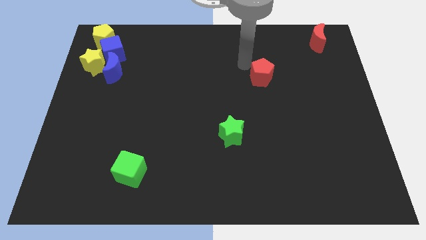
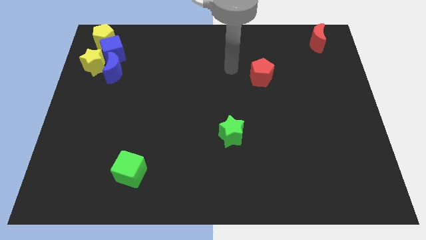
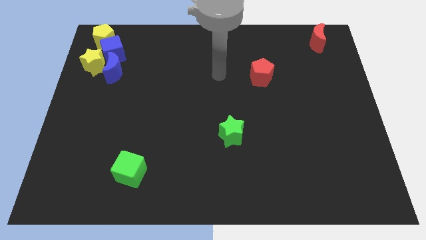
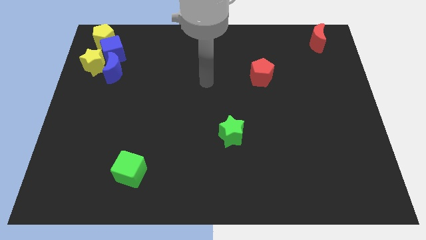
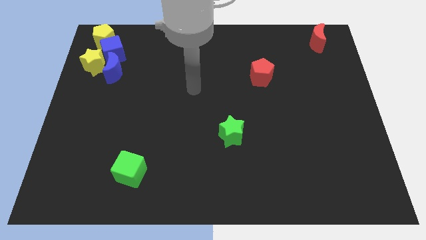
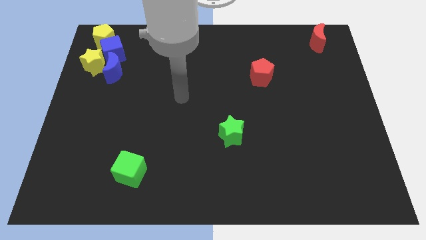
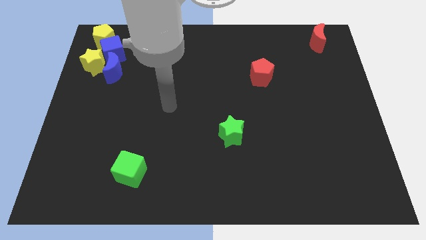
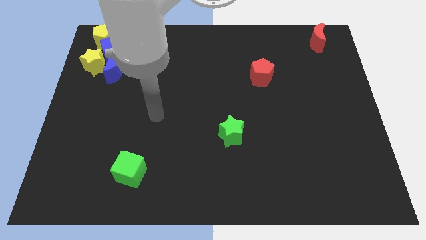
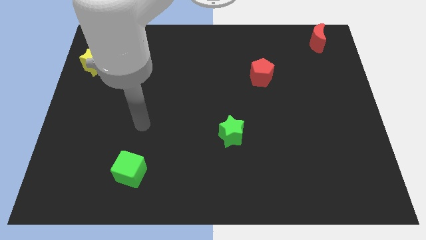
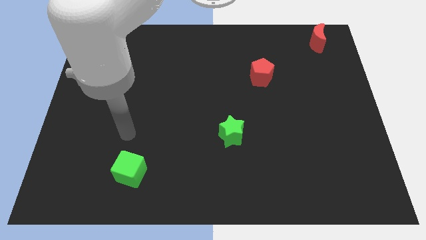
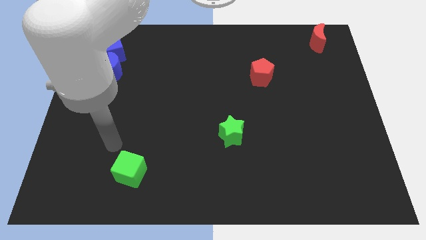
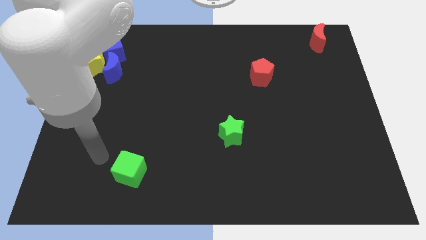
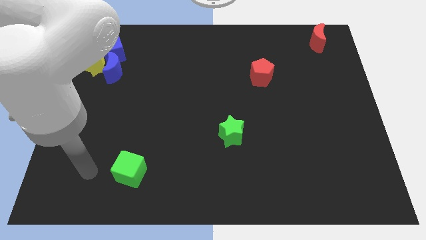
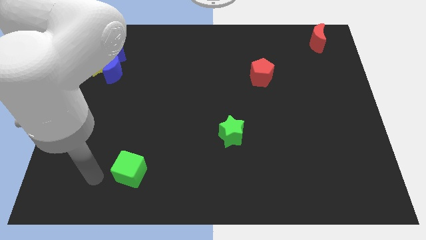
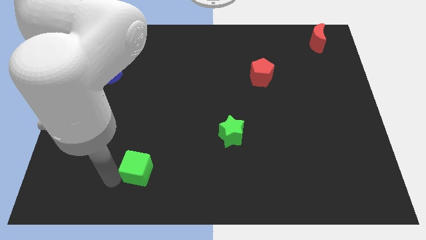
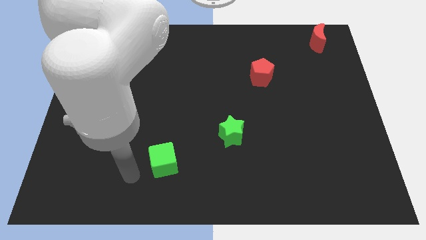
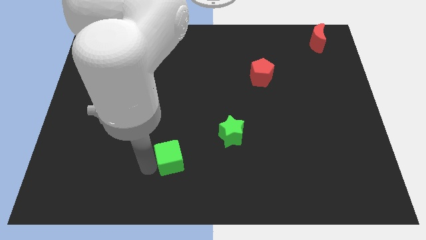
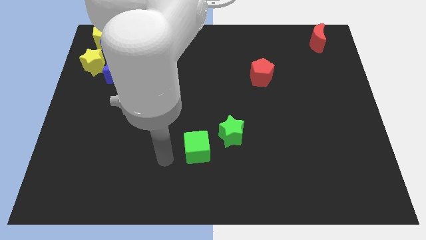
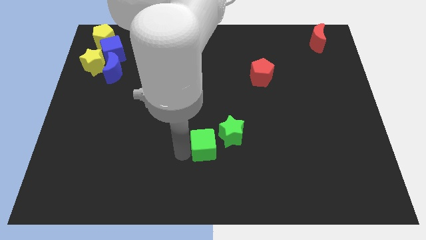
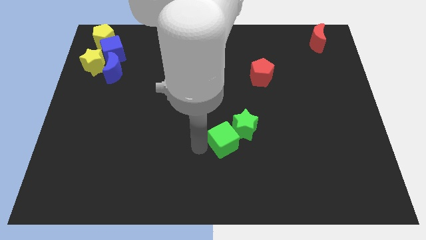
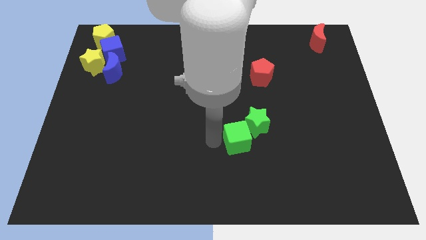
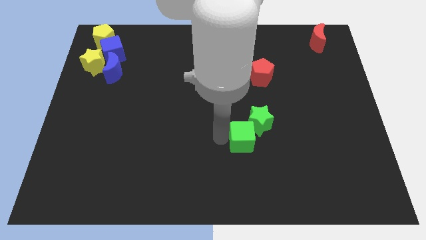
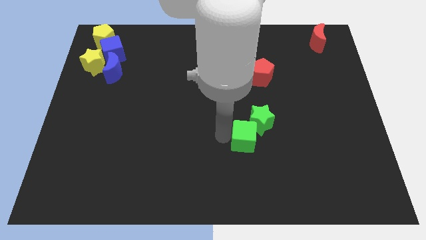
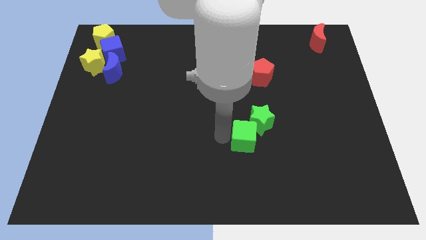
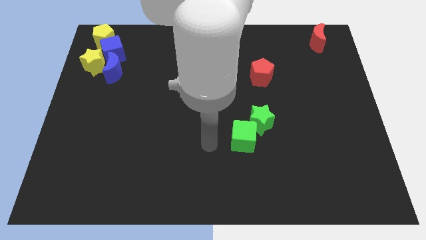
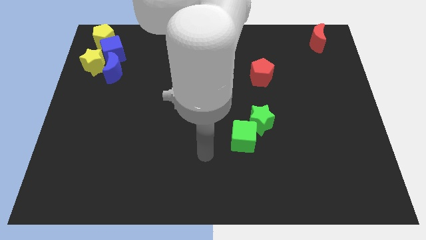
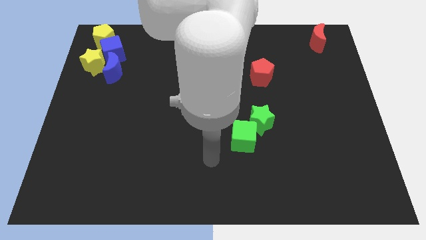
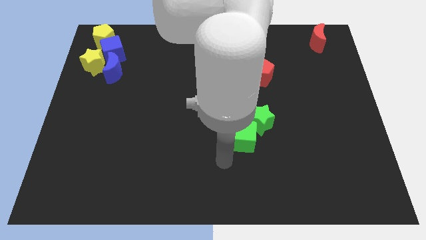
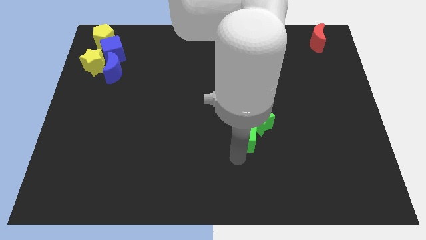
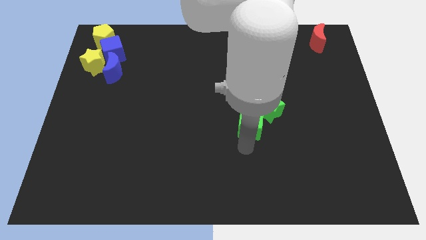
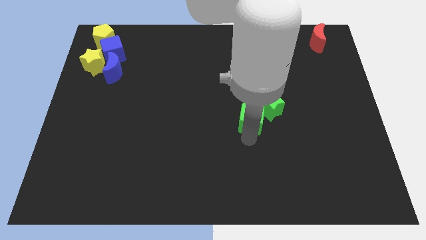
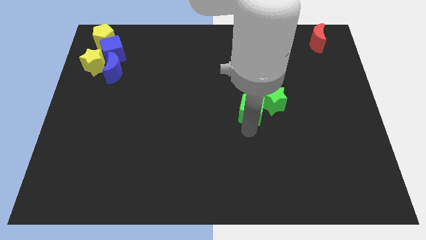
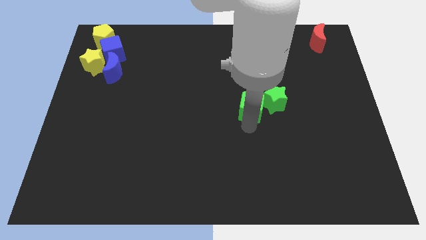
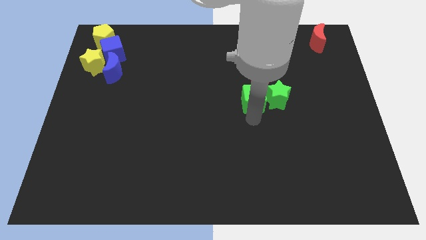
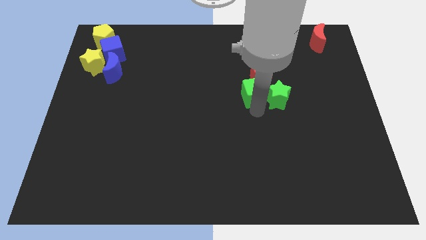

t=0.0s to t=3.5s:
push the green blocks to the bottom of the red pentagon

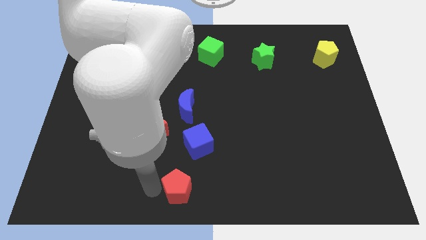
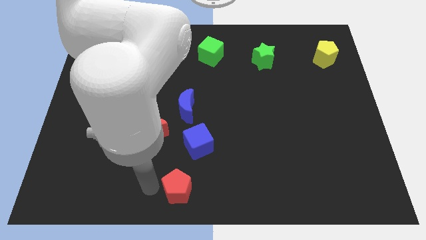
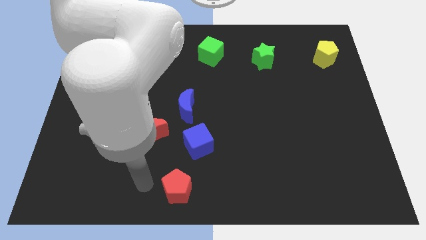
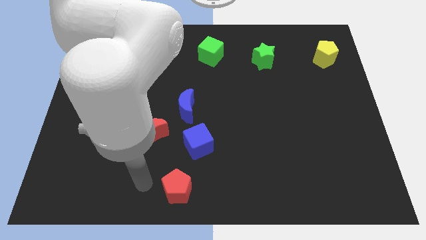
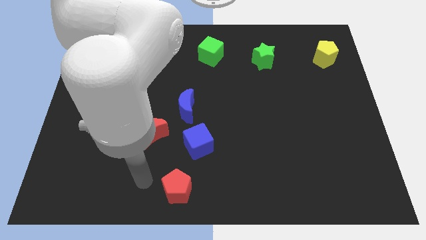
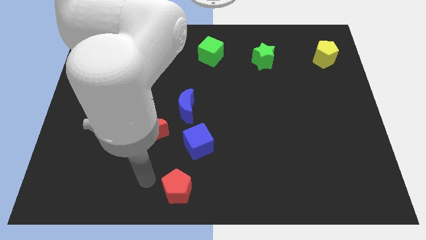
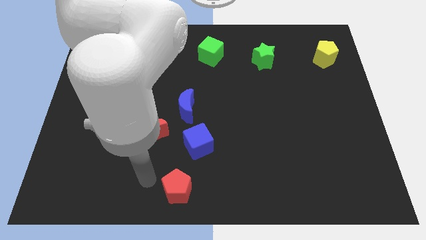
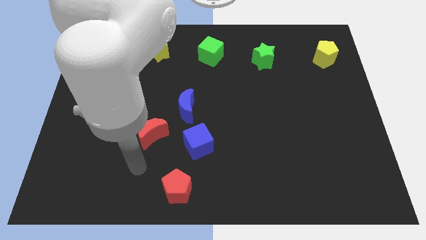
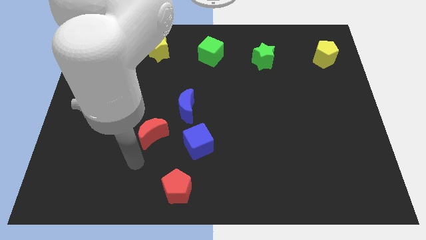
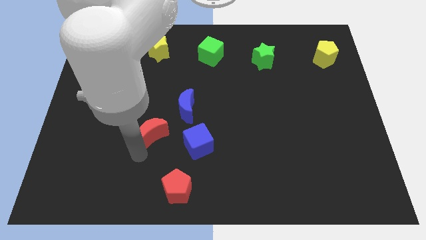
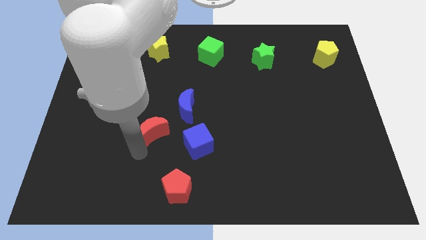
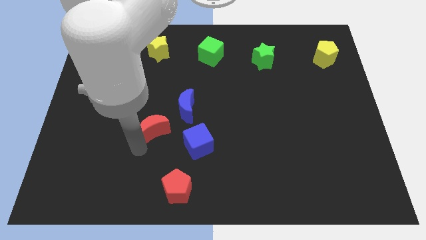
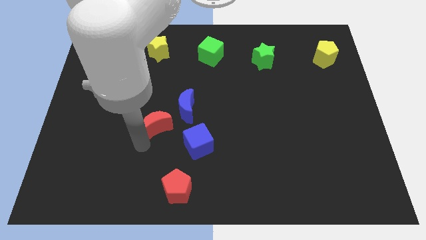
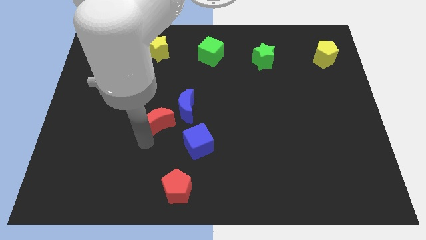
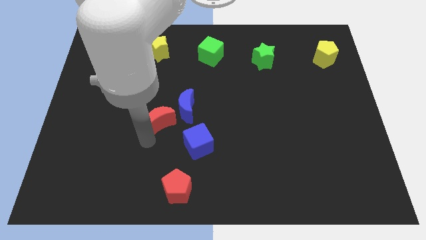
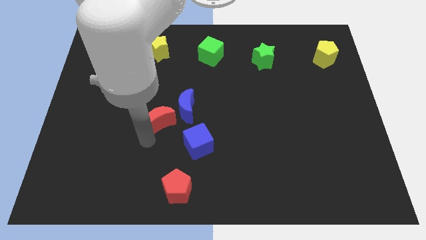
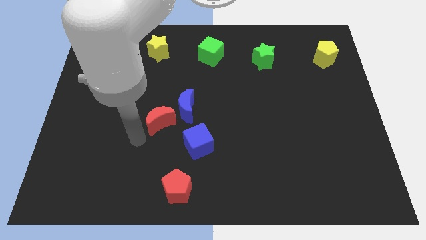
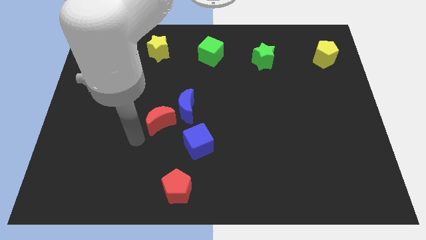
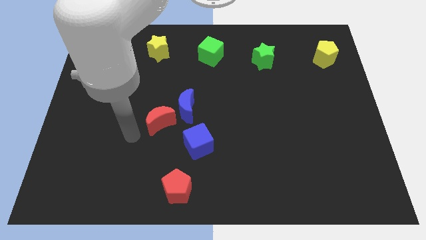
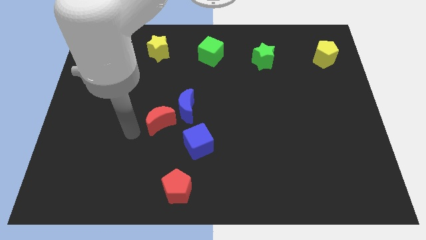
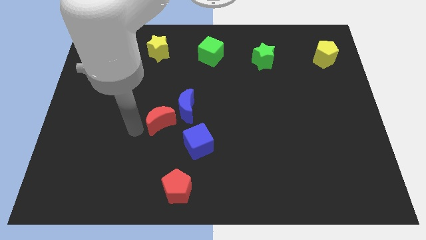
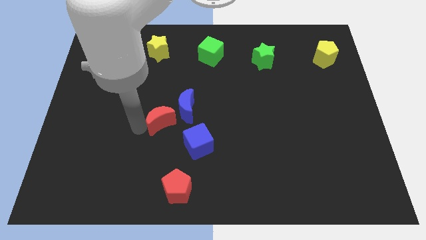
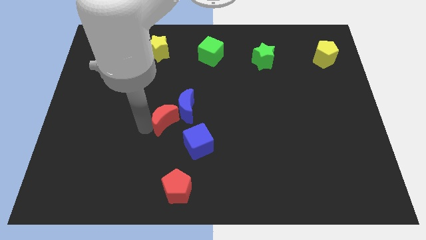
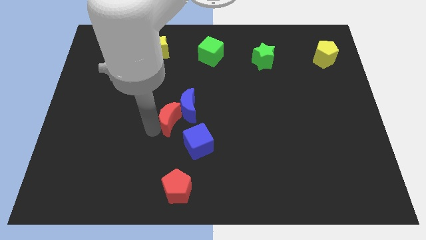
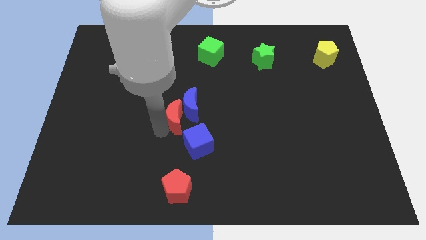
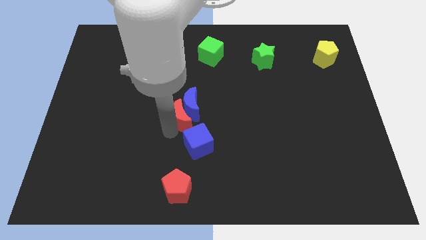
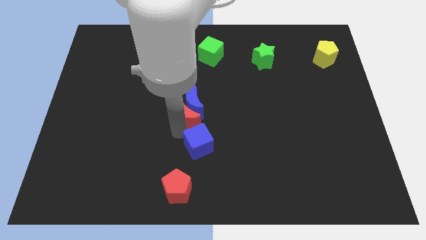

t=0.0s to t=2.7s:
move red moon into the blue moon

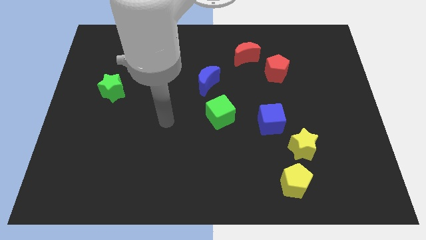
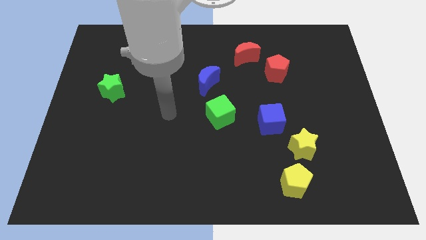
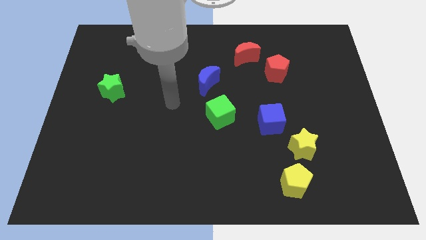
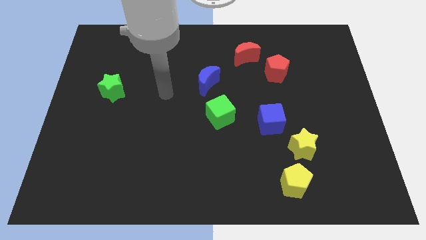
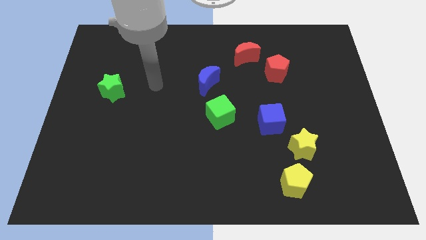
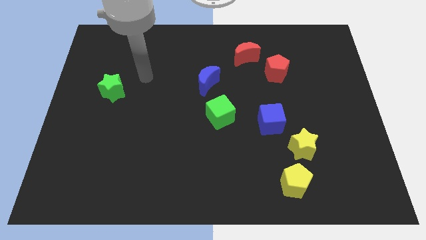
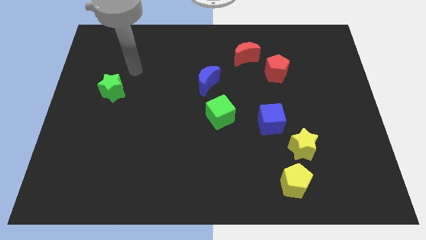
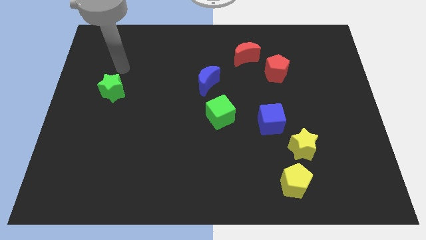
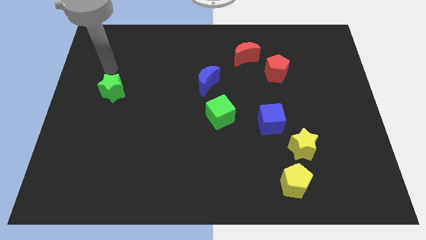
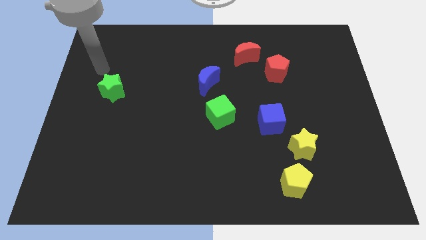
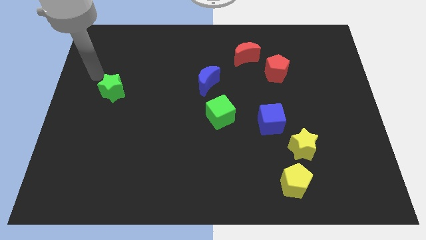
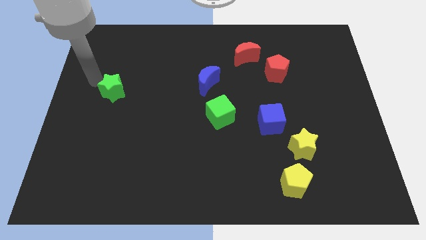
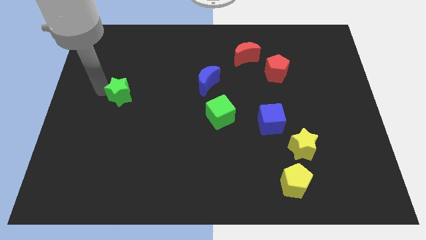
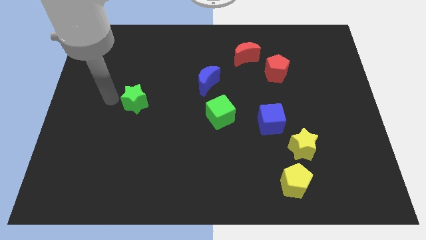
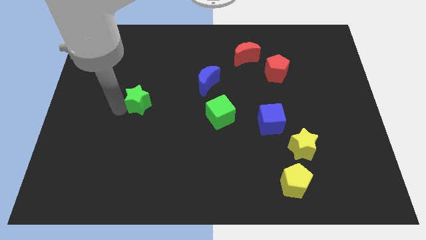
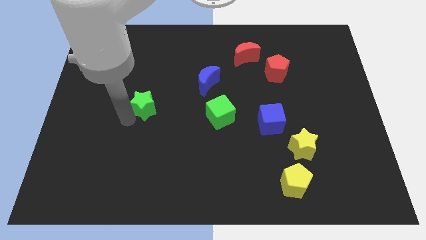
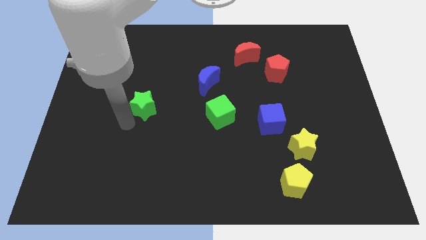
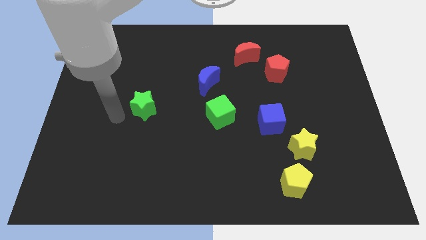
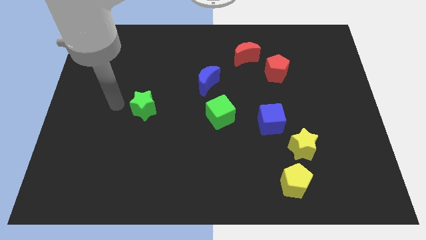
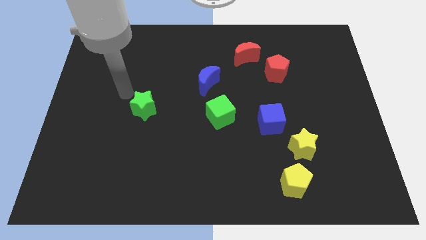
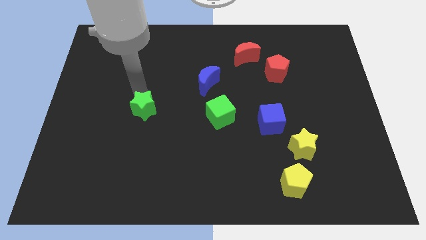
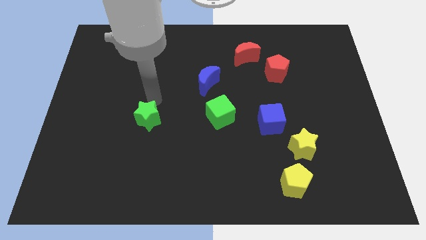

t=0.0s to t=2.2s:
place the green star to the left of the green cube

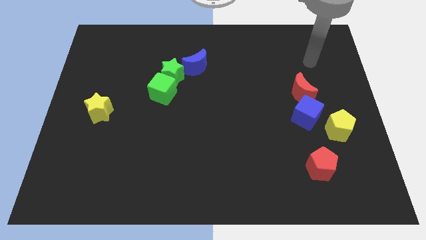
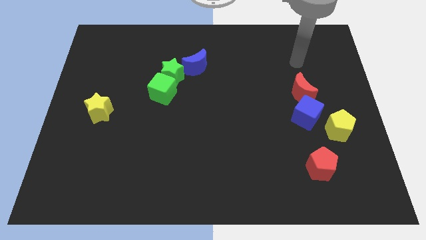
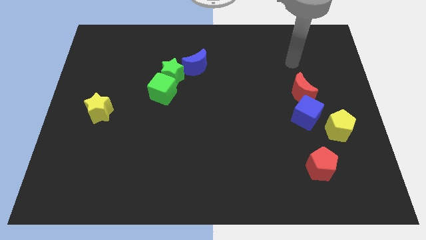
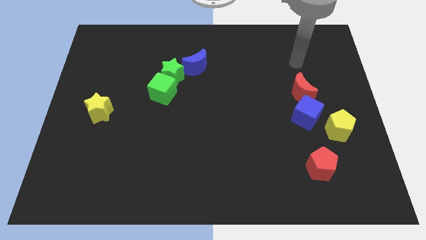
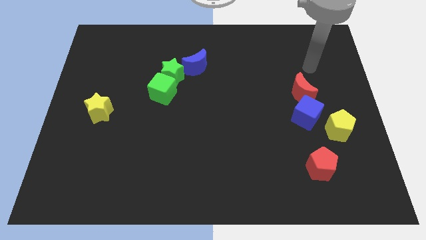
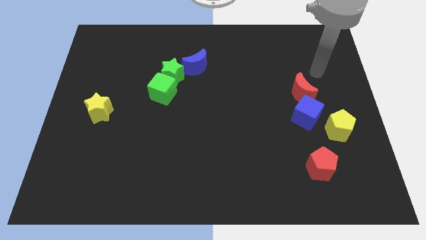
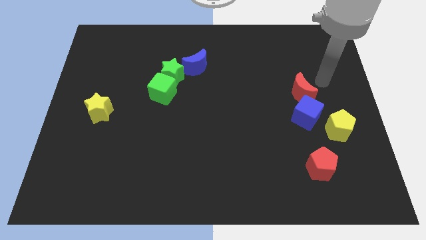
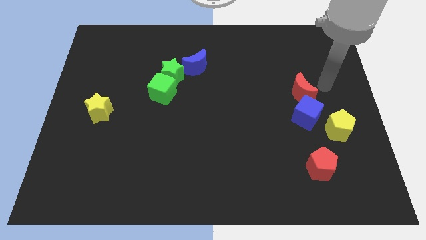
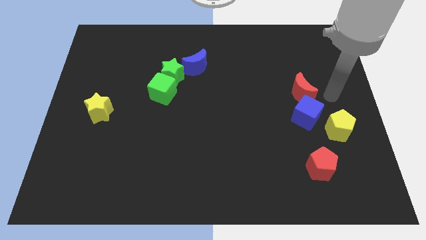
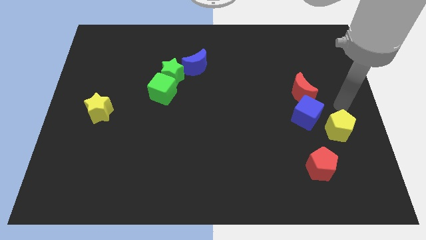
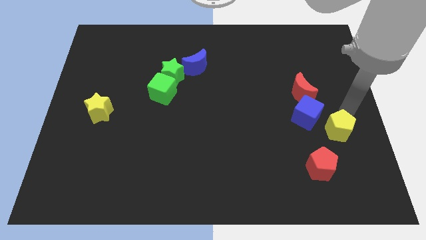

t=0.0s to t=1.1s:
point your arm at the top of yellow pentagon
